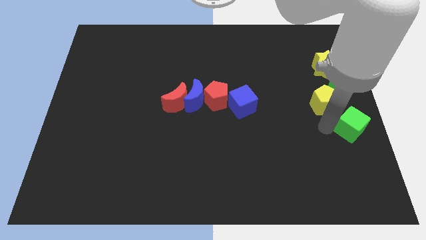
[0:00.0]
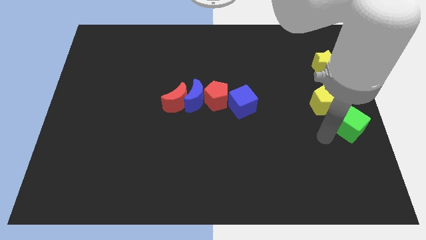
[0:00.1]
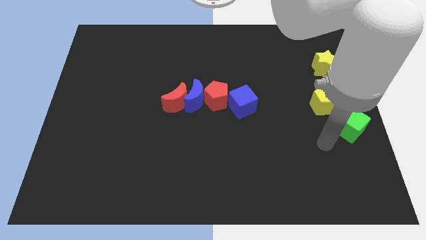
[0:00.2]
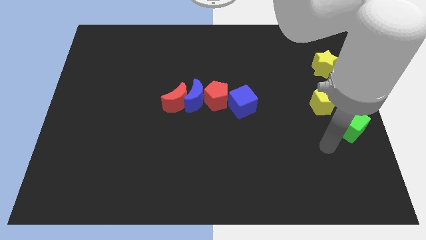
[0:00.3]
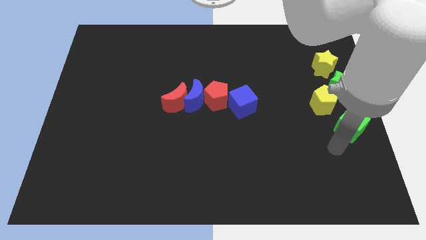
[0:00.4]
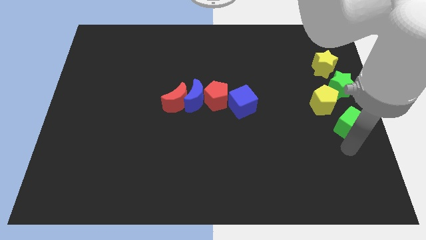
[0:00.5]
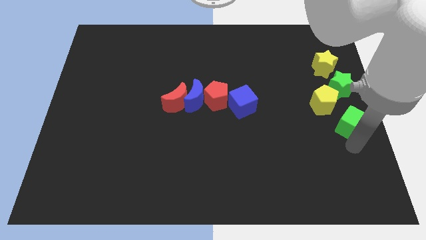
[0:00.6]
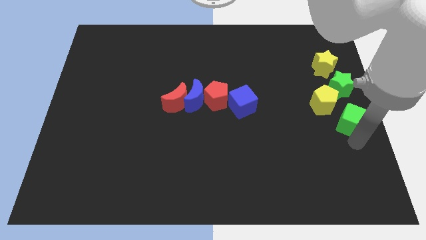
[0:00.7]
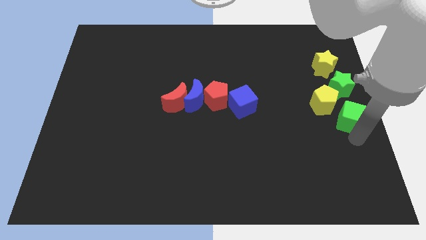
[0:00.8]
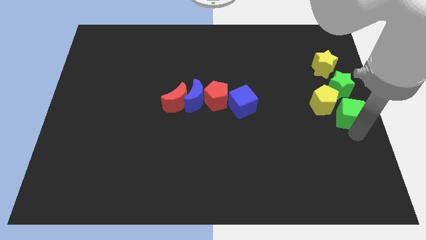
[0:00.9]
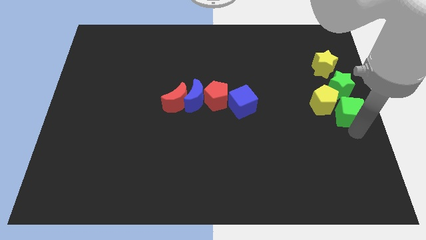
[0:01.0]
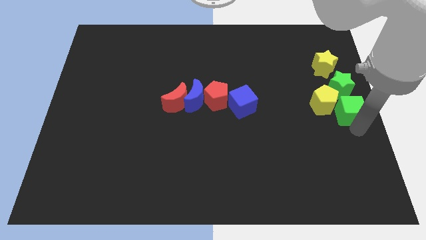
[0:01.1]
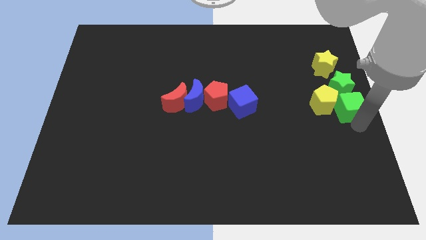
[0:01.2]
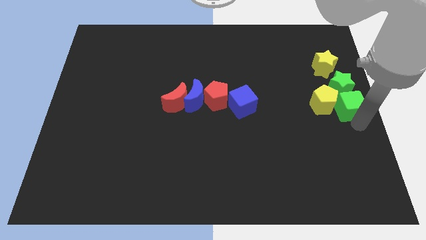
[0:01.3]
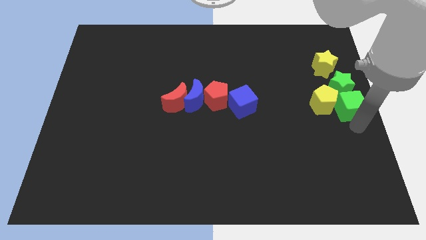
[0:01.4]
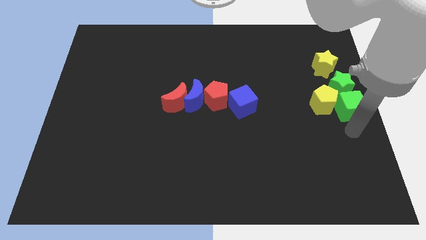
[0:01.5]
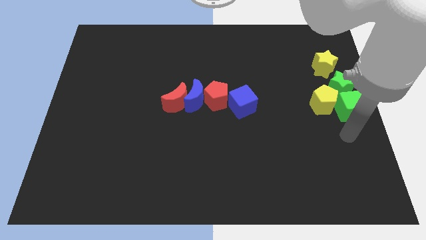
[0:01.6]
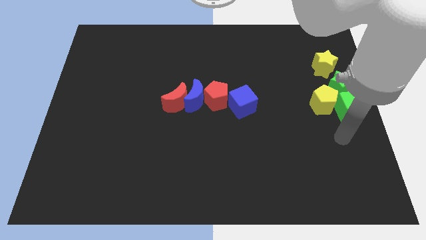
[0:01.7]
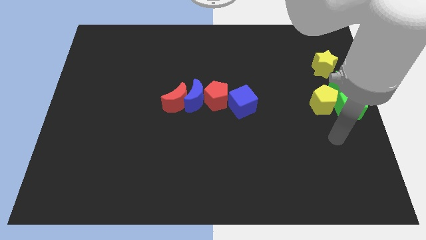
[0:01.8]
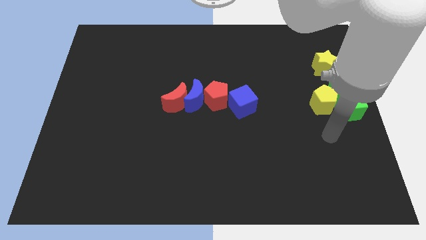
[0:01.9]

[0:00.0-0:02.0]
move the green cube to the bottom of the green star

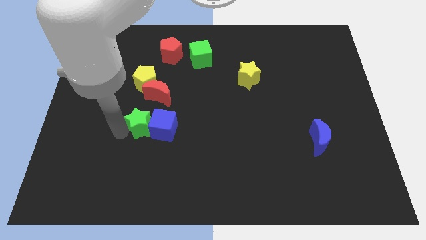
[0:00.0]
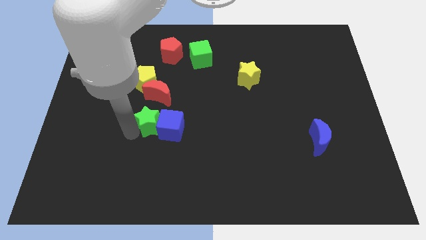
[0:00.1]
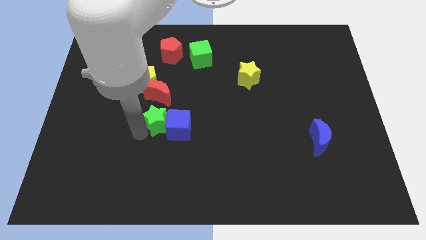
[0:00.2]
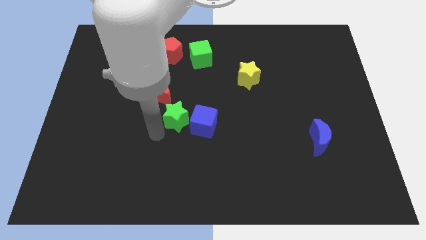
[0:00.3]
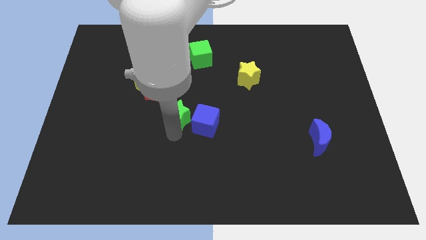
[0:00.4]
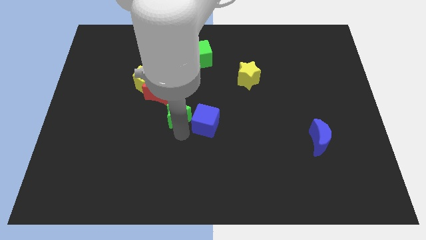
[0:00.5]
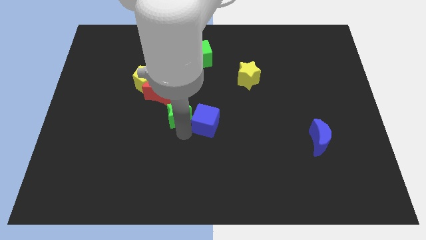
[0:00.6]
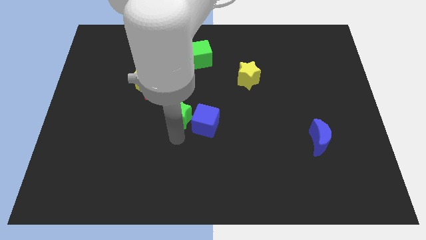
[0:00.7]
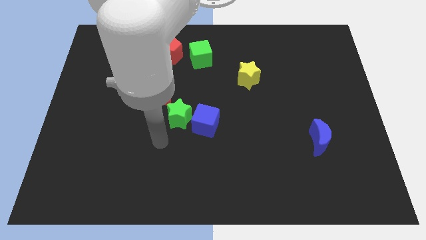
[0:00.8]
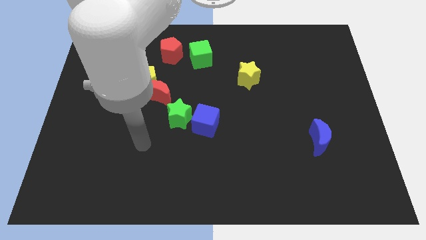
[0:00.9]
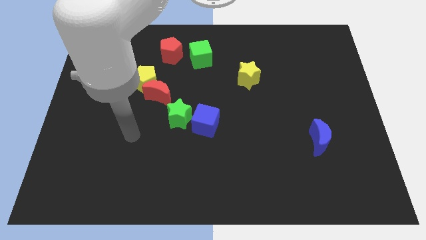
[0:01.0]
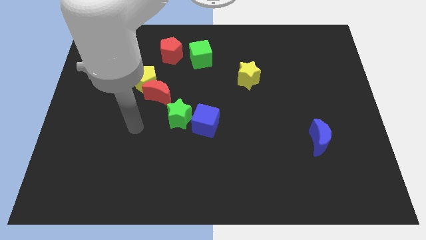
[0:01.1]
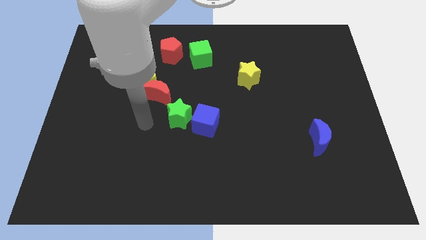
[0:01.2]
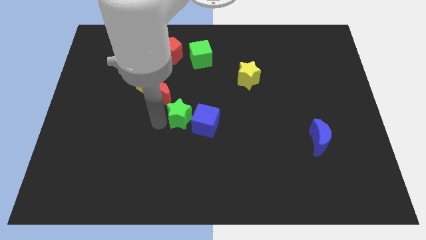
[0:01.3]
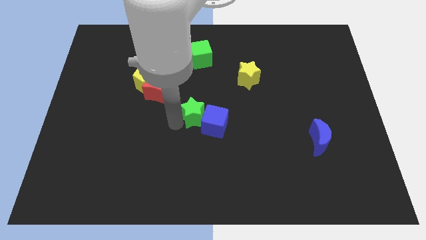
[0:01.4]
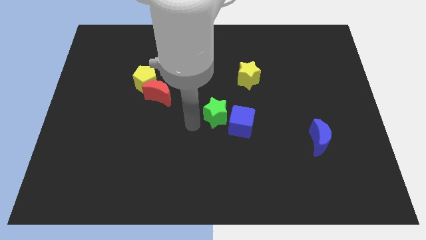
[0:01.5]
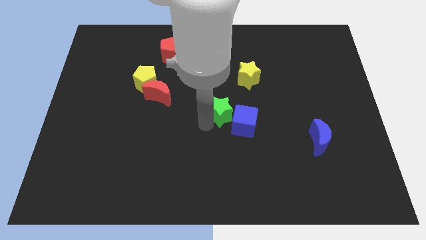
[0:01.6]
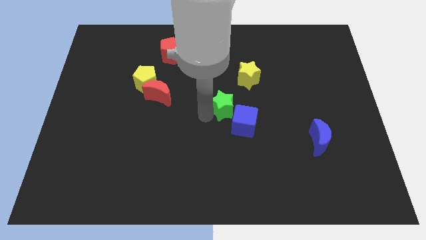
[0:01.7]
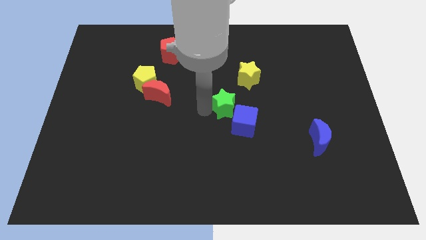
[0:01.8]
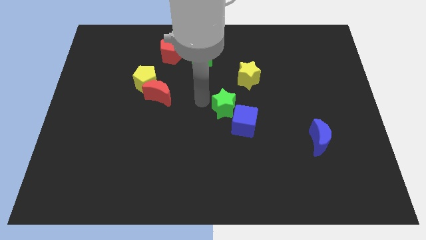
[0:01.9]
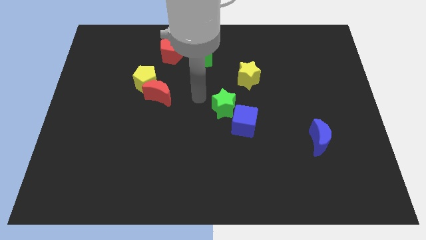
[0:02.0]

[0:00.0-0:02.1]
push the green star and blue cube to the right side

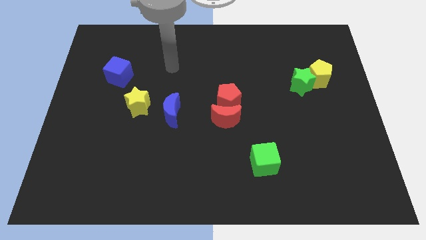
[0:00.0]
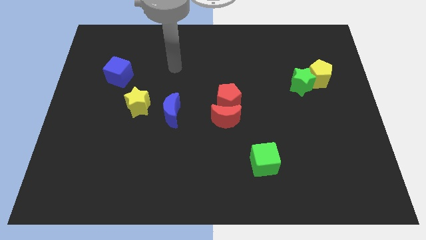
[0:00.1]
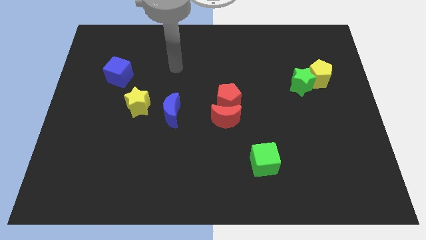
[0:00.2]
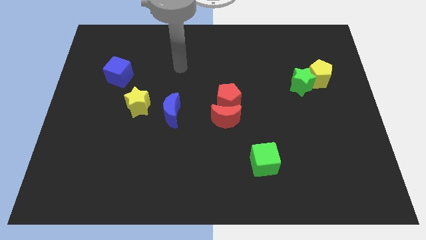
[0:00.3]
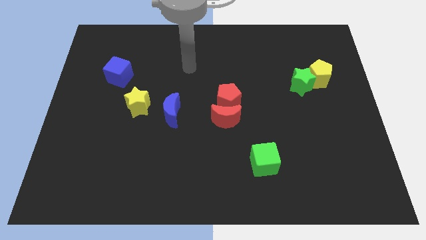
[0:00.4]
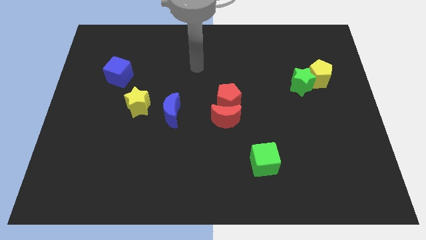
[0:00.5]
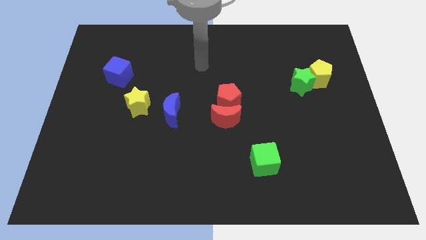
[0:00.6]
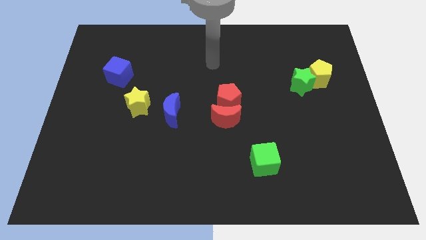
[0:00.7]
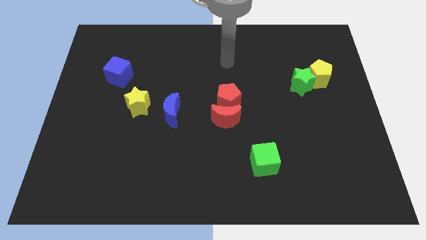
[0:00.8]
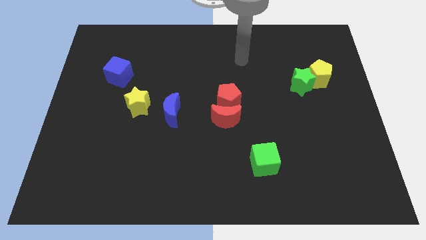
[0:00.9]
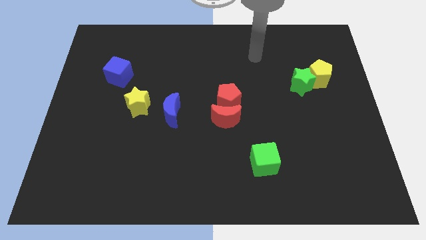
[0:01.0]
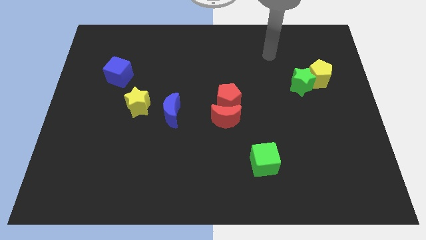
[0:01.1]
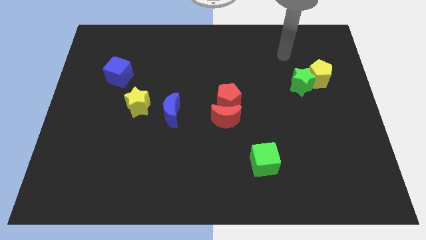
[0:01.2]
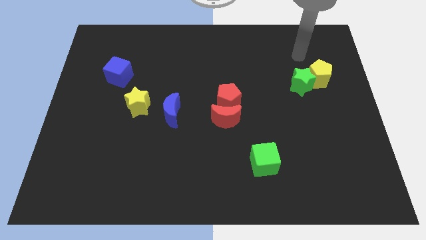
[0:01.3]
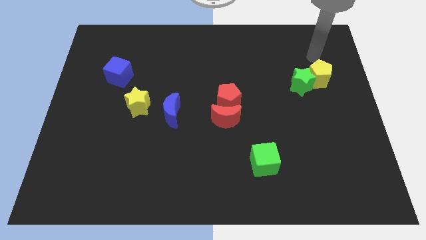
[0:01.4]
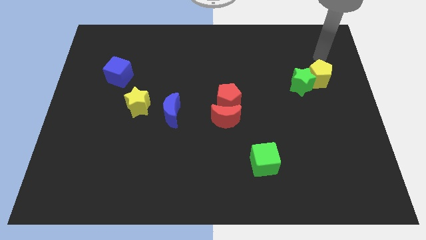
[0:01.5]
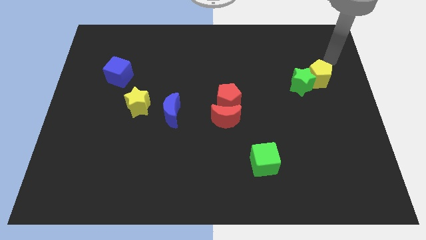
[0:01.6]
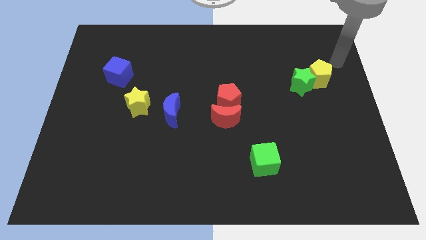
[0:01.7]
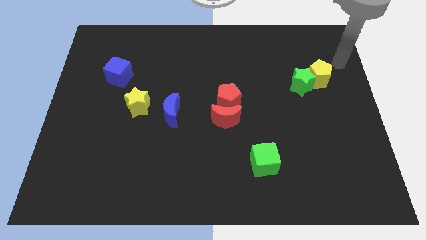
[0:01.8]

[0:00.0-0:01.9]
move the arm towards the yellow pentagon

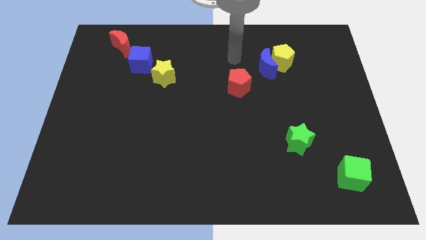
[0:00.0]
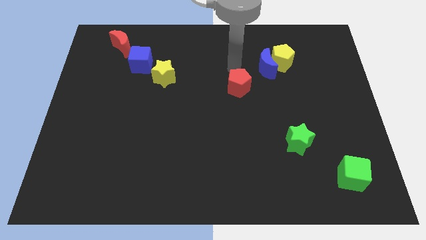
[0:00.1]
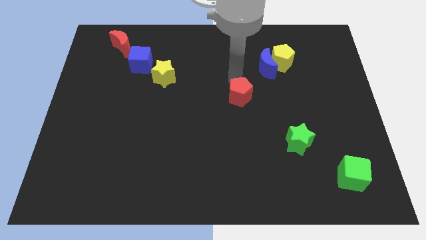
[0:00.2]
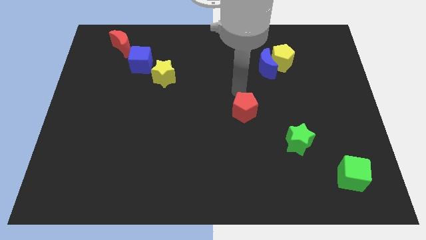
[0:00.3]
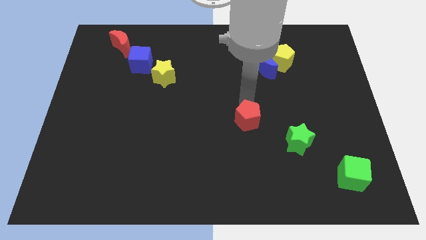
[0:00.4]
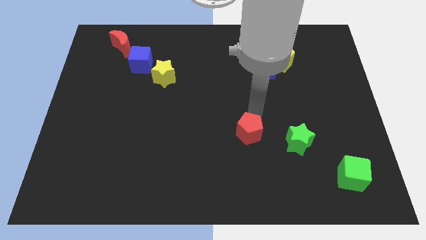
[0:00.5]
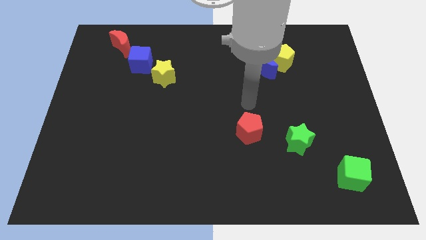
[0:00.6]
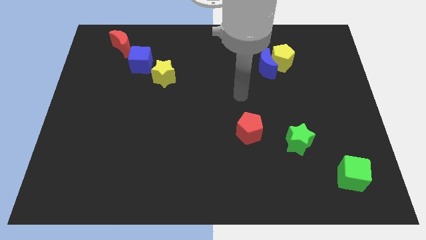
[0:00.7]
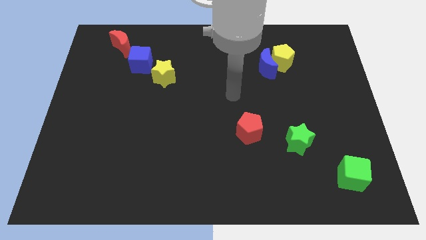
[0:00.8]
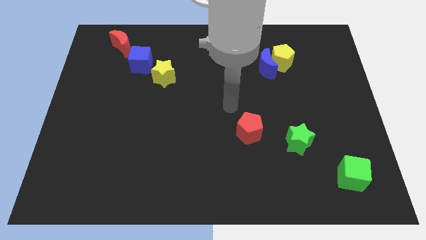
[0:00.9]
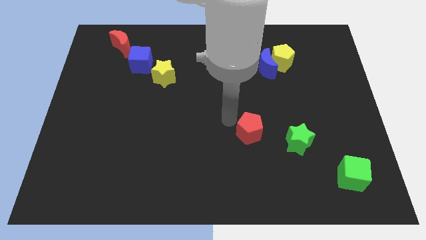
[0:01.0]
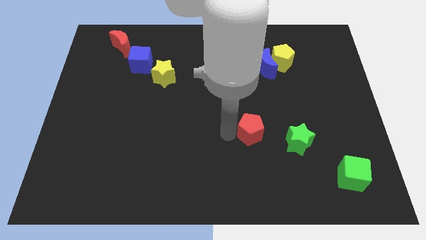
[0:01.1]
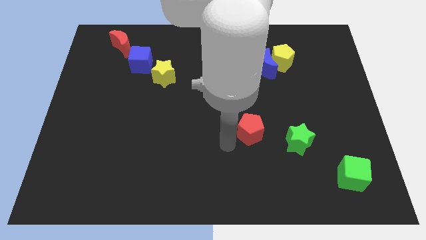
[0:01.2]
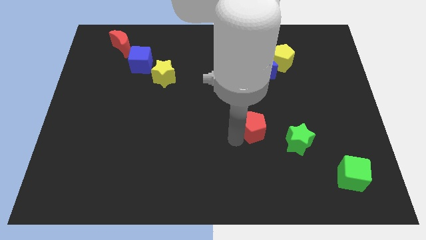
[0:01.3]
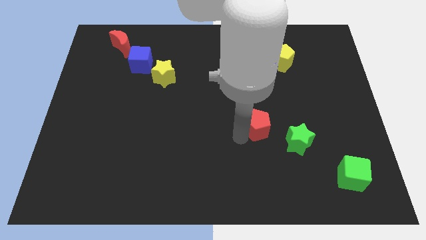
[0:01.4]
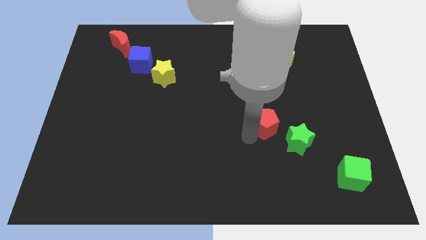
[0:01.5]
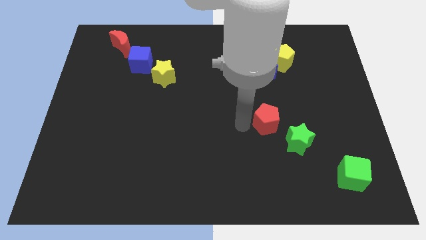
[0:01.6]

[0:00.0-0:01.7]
put the red pentagon diagonal to the yellow star

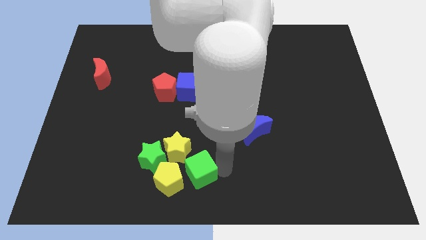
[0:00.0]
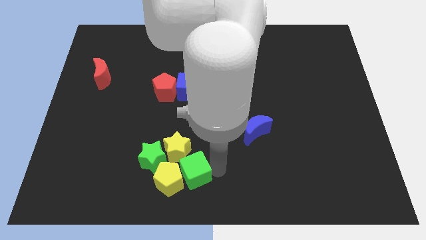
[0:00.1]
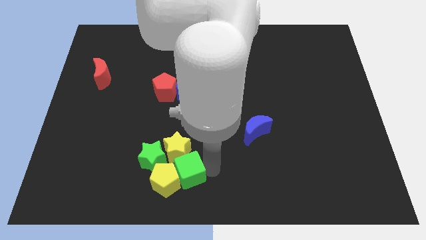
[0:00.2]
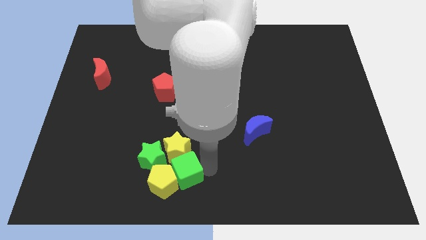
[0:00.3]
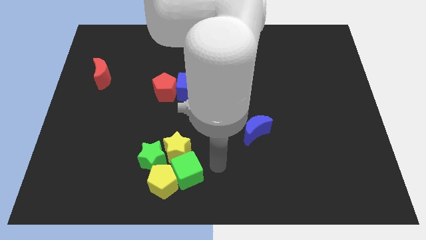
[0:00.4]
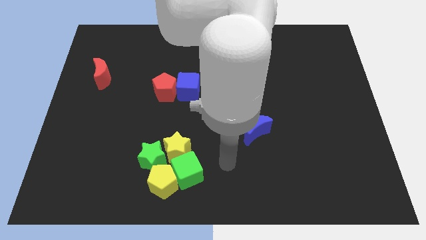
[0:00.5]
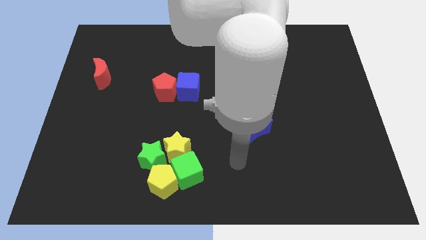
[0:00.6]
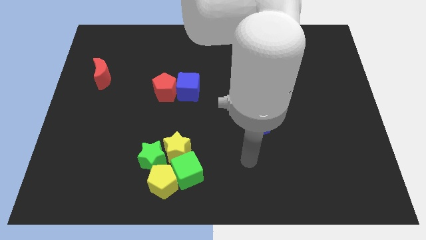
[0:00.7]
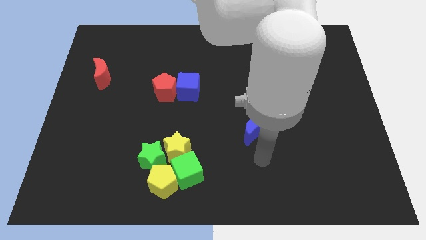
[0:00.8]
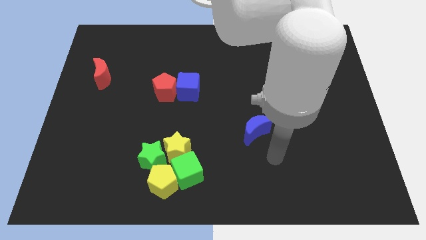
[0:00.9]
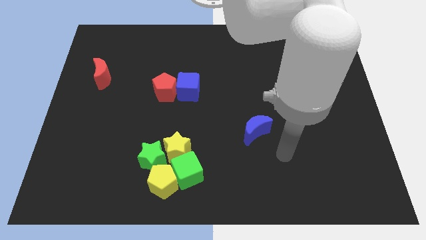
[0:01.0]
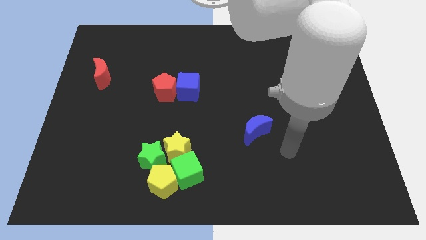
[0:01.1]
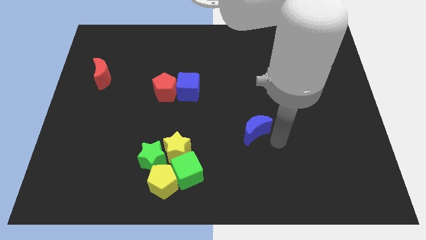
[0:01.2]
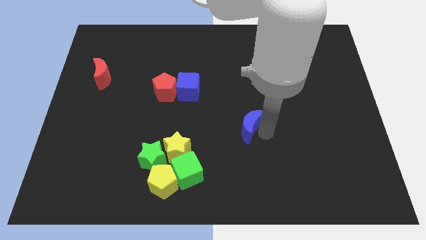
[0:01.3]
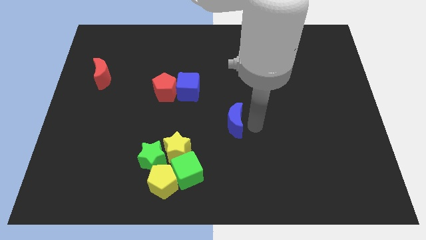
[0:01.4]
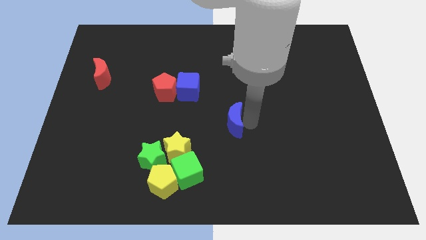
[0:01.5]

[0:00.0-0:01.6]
attach the green cube to the yellow pentagon
